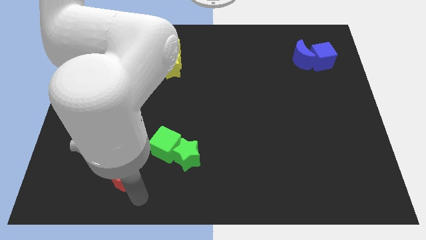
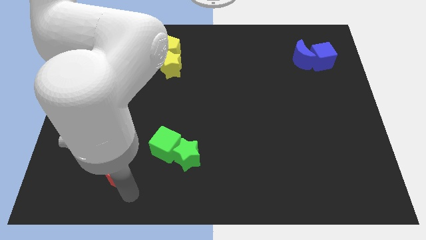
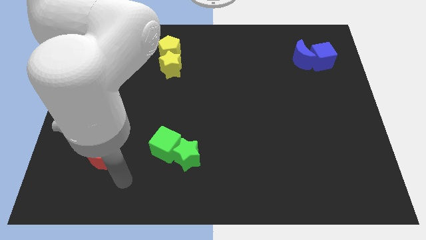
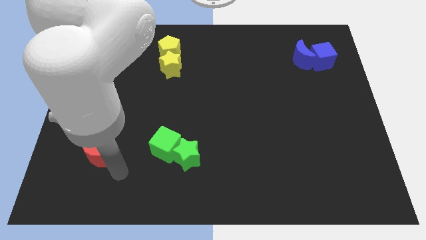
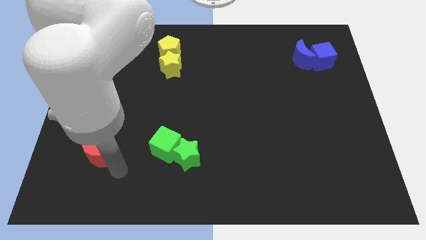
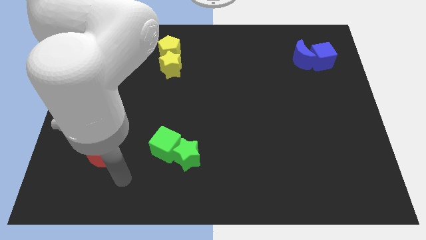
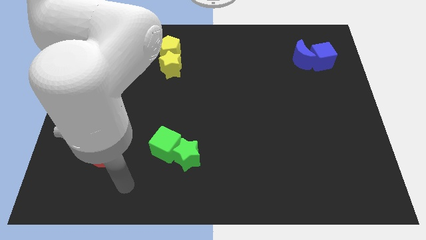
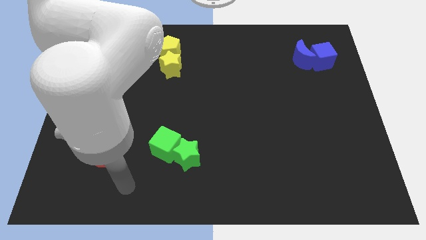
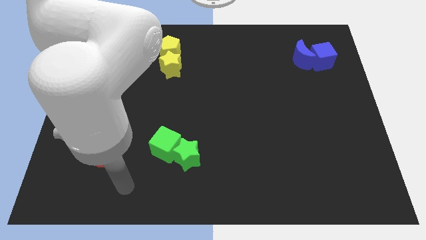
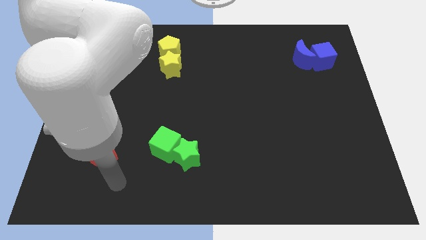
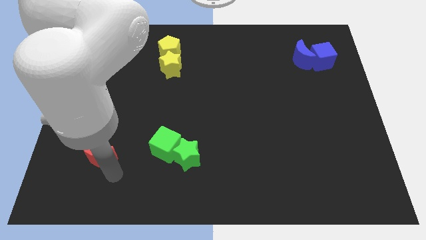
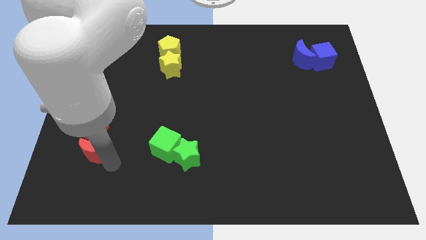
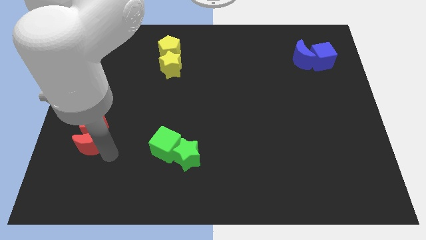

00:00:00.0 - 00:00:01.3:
move the red crescent to the bottom of the red pentagon

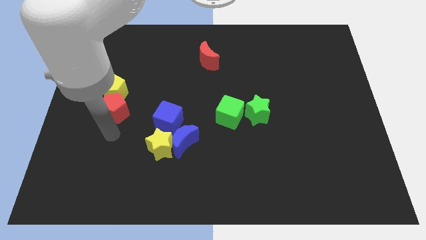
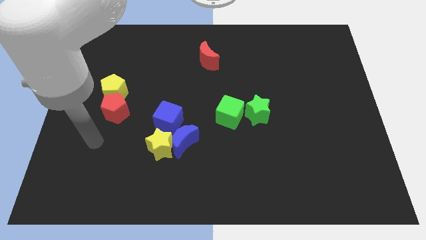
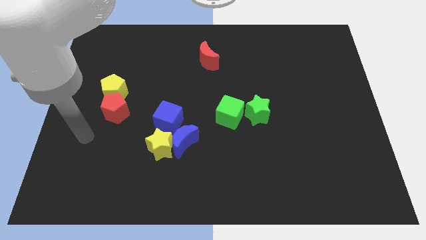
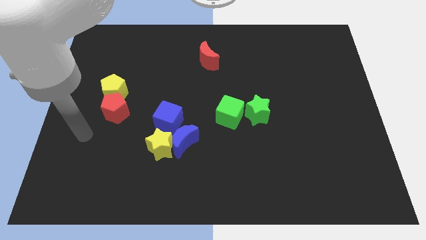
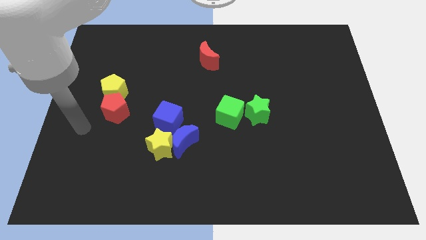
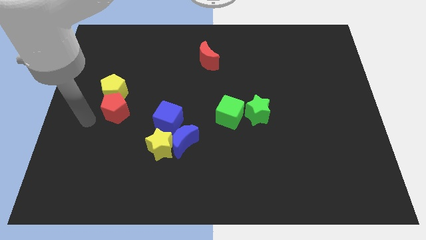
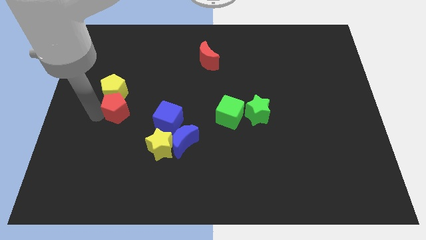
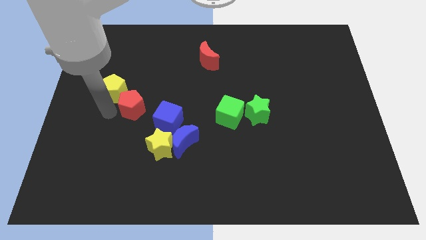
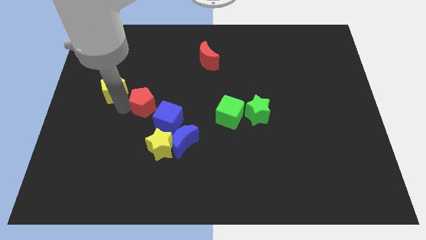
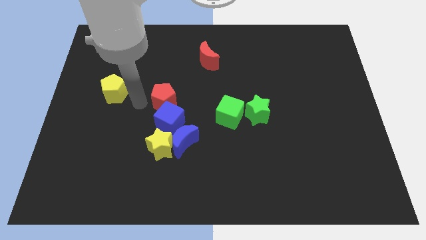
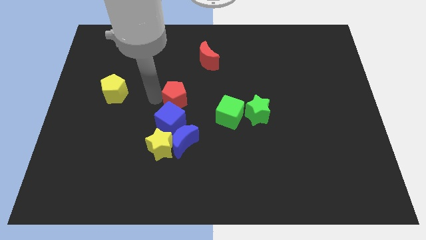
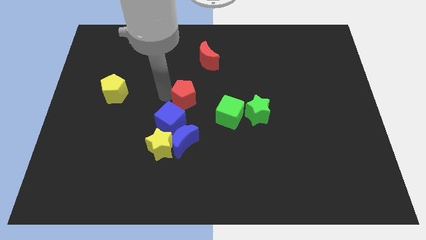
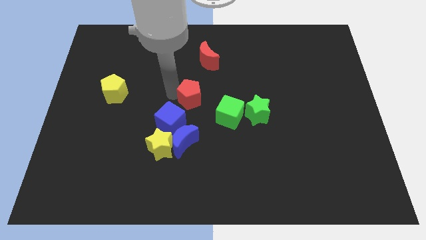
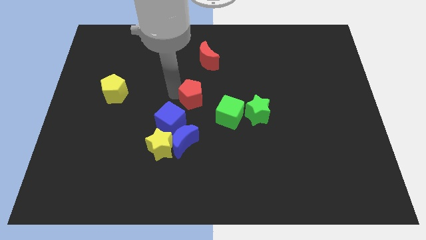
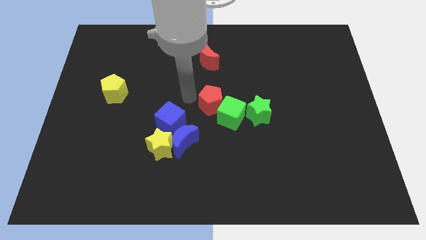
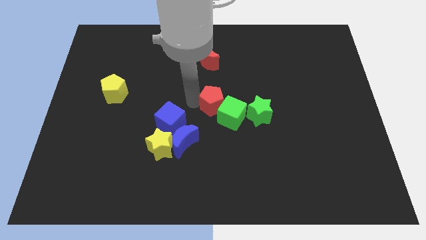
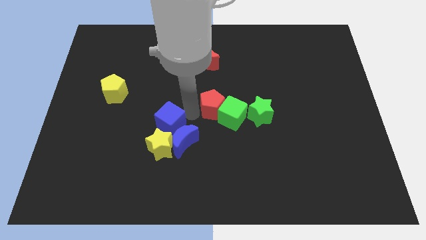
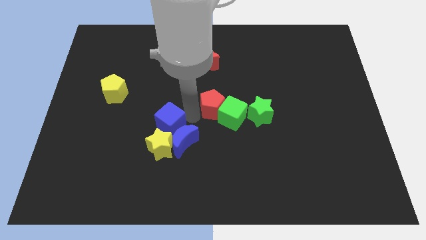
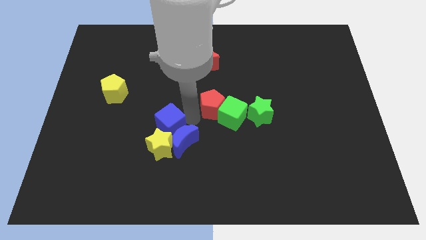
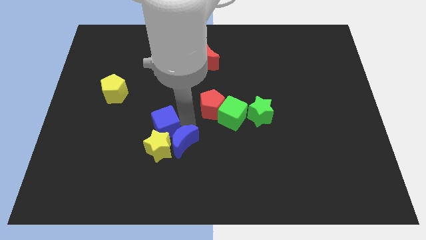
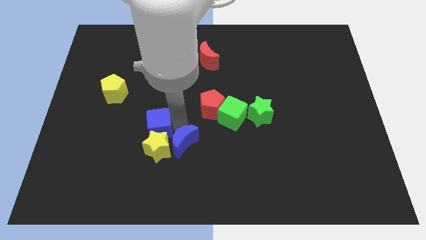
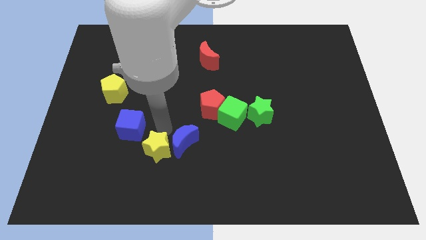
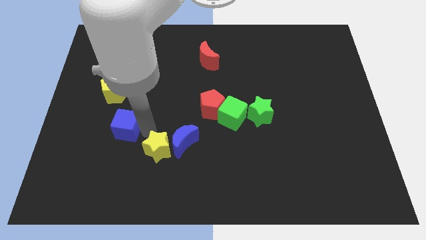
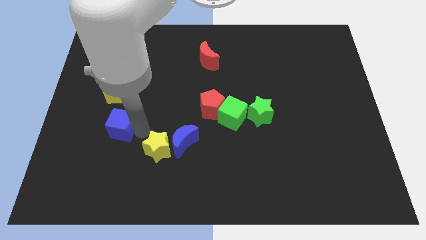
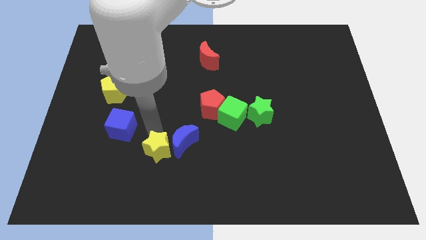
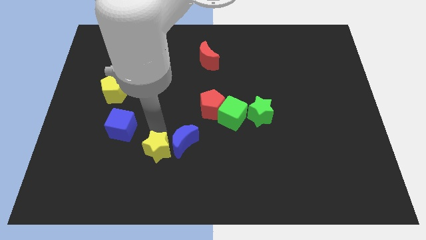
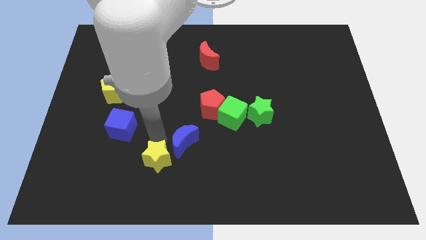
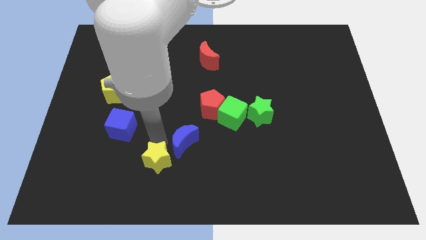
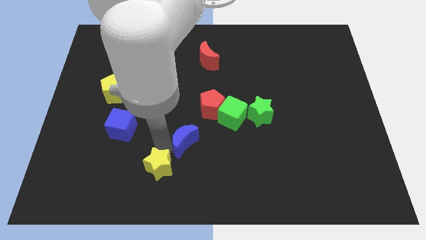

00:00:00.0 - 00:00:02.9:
move the red pentagon left to the green cube

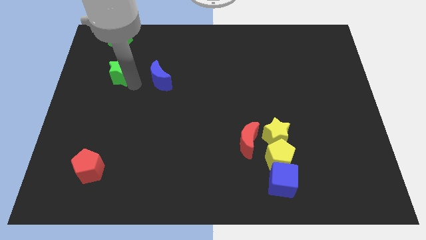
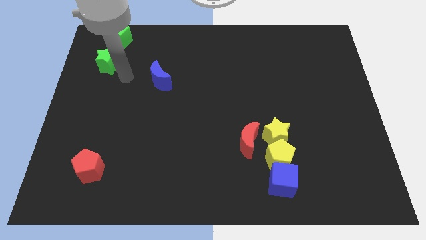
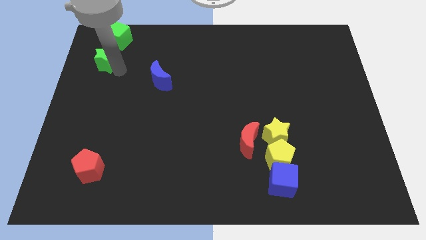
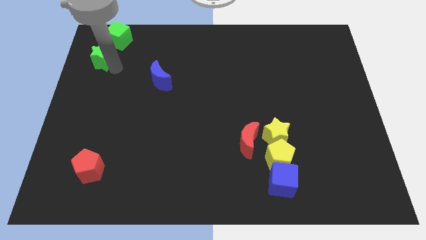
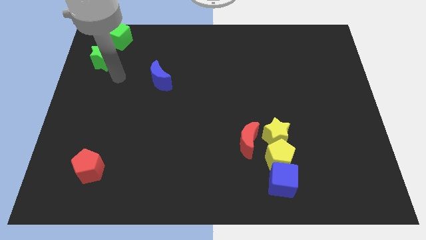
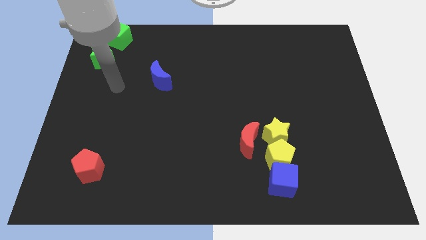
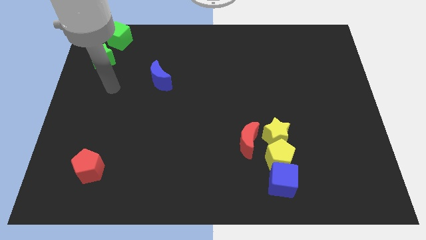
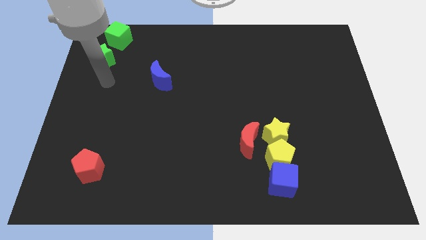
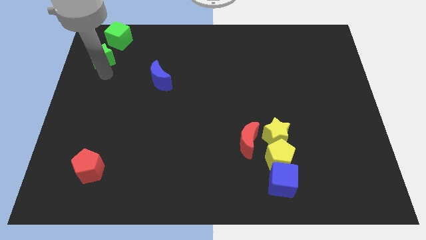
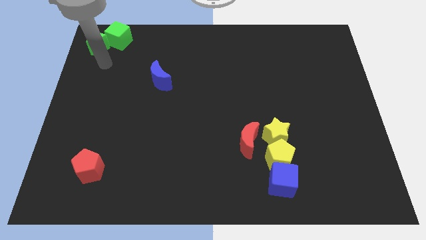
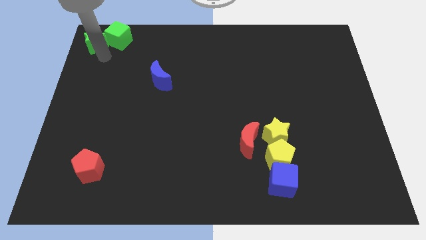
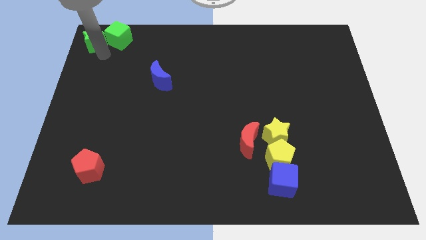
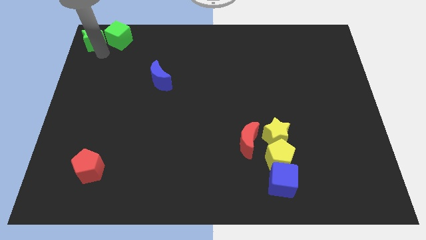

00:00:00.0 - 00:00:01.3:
place the green star left of green cube

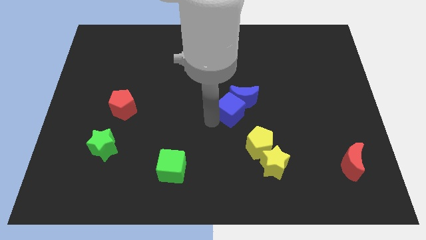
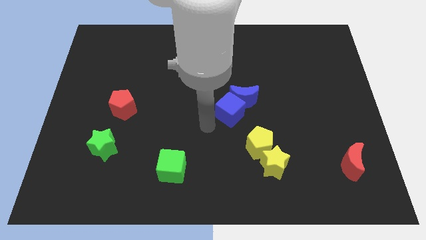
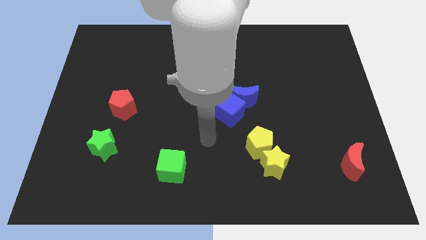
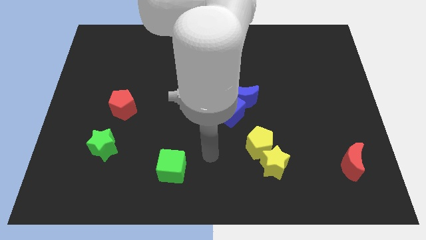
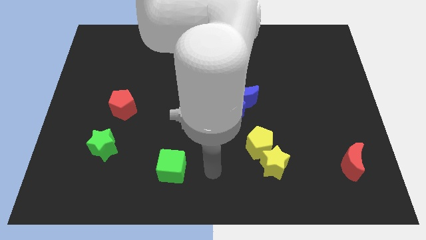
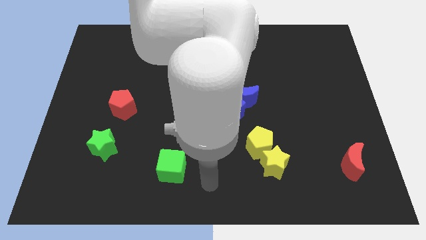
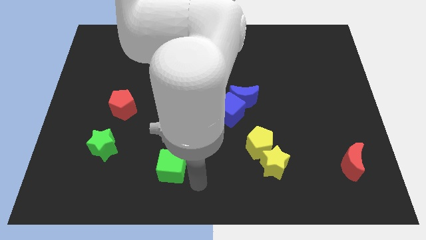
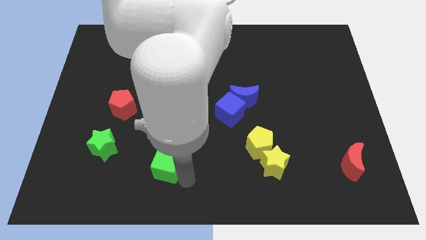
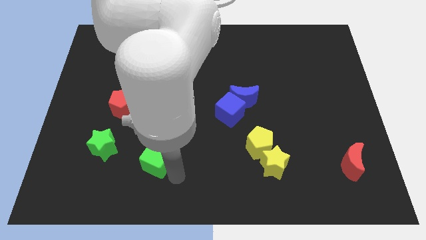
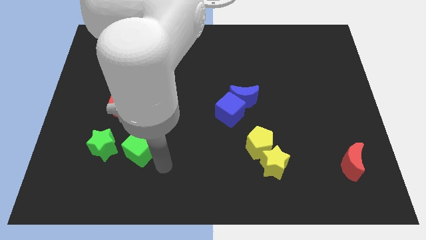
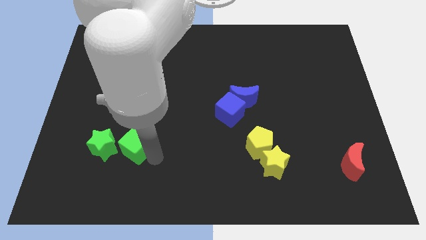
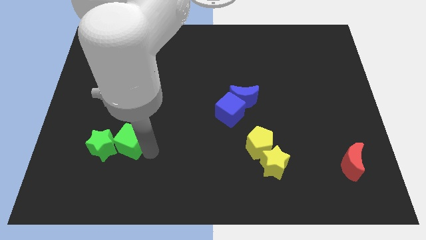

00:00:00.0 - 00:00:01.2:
push the green cube into the green star

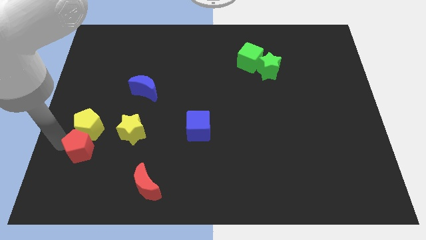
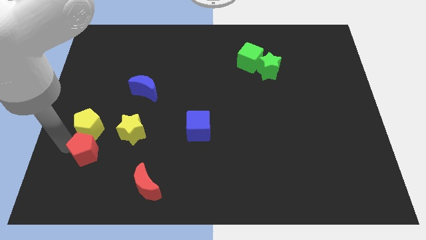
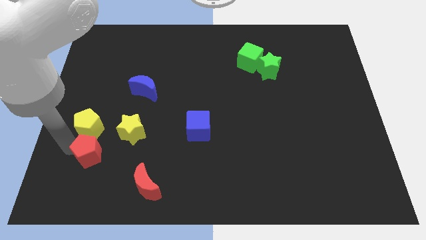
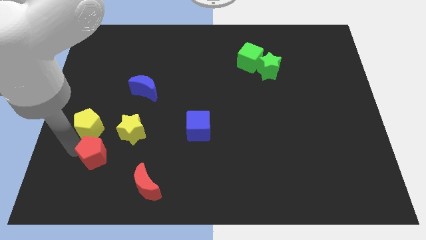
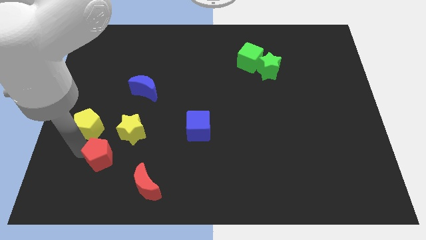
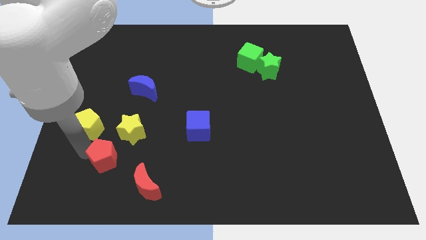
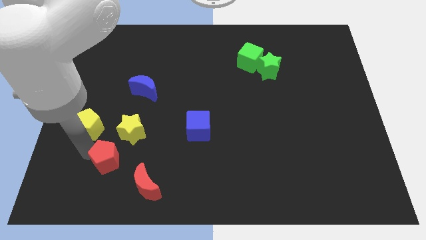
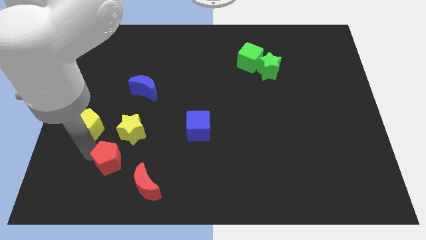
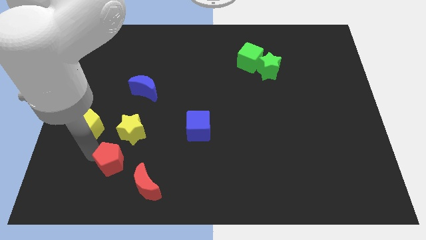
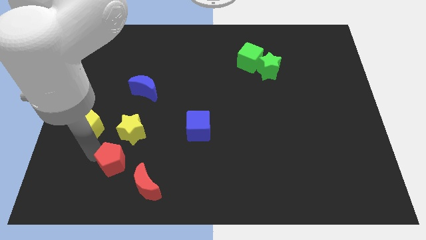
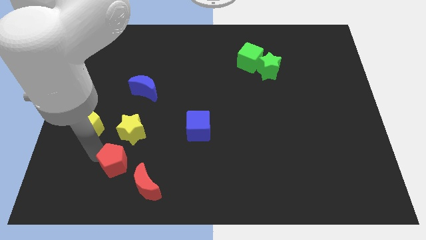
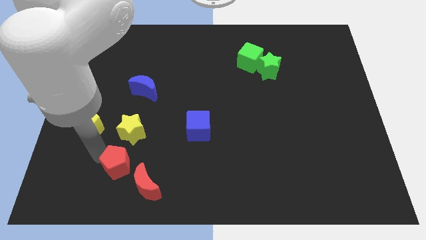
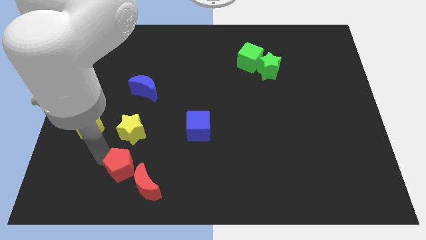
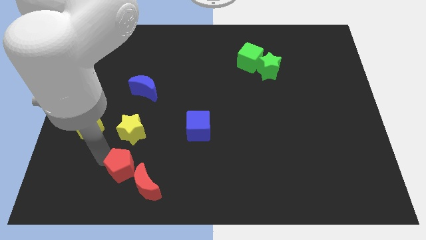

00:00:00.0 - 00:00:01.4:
move the red pentagon diagonally to the top left of the red crescent

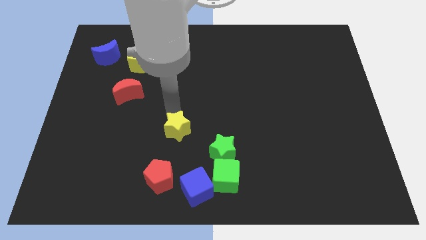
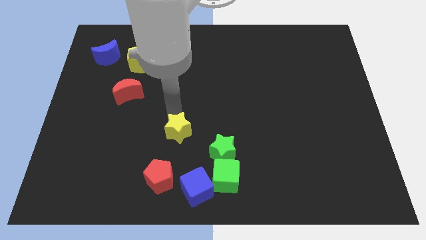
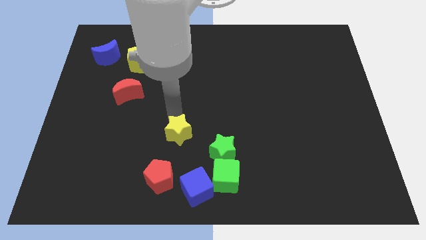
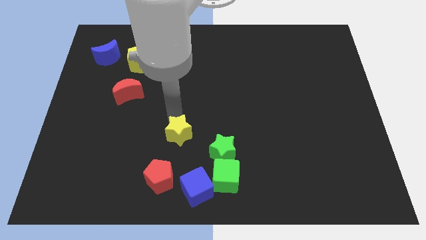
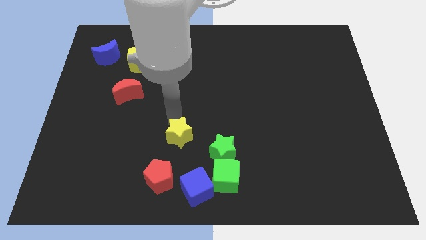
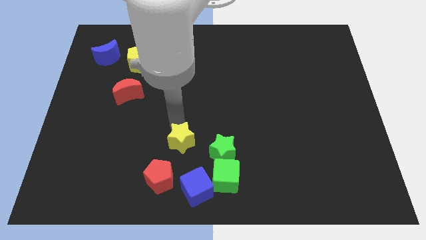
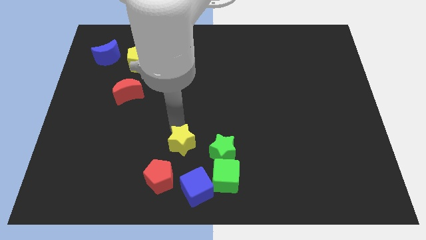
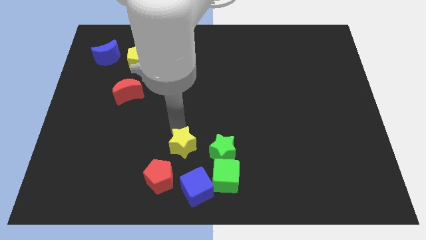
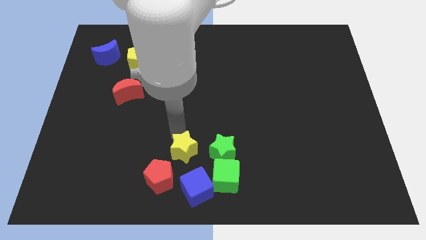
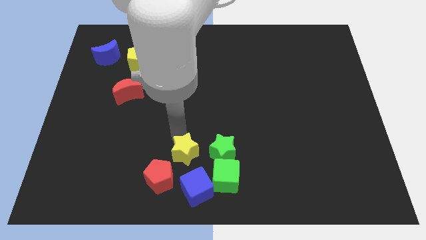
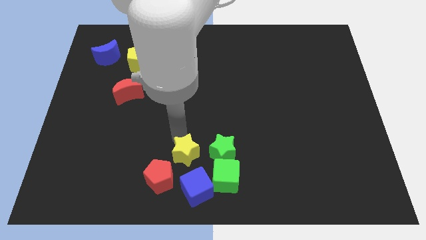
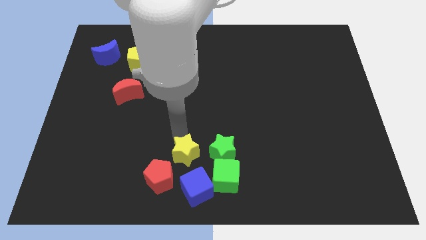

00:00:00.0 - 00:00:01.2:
push the yellow star parallel to the green star
